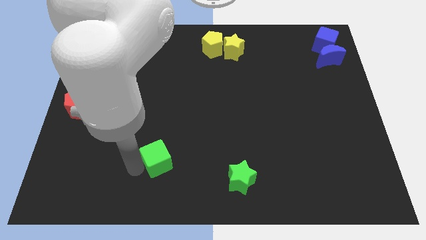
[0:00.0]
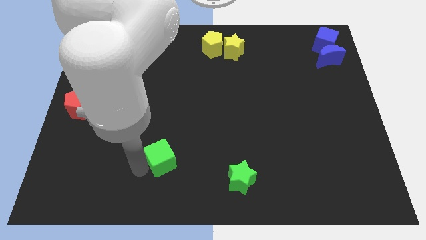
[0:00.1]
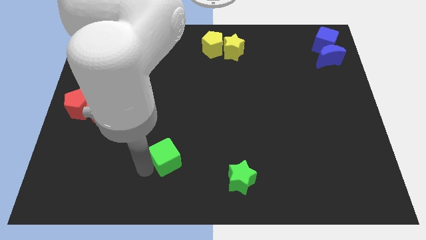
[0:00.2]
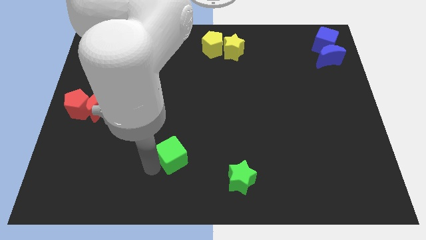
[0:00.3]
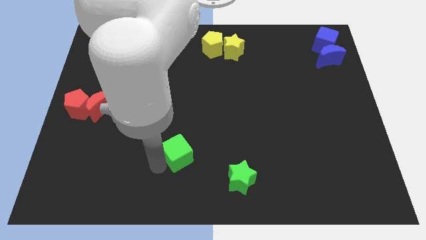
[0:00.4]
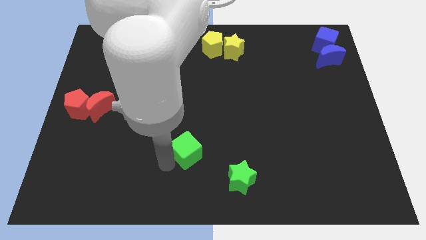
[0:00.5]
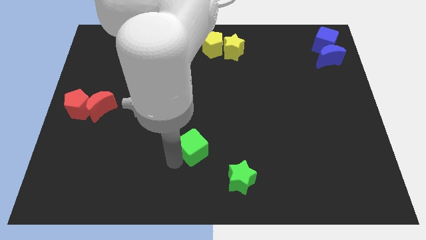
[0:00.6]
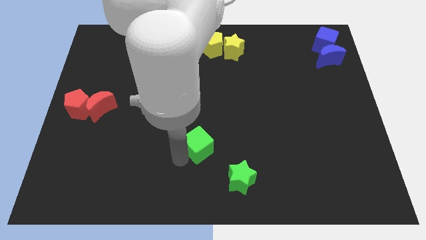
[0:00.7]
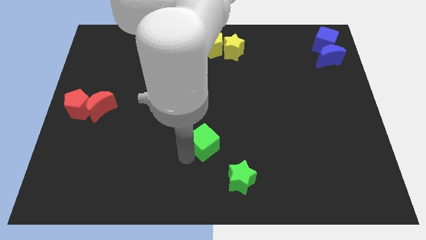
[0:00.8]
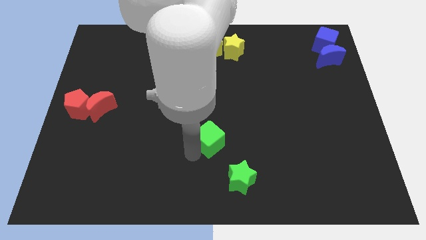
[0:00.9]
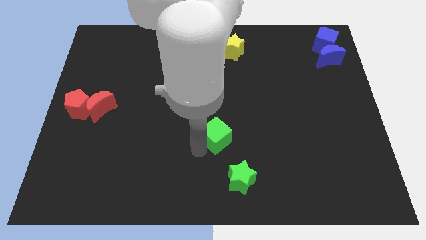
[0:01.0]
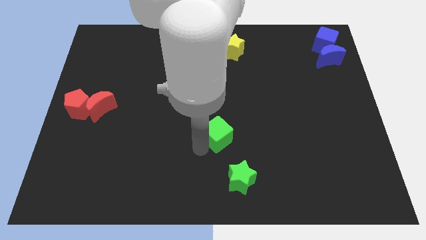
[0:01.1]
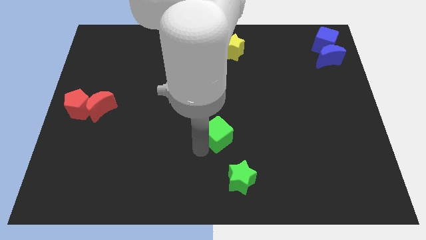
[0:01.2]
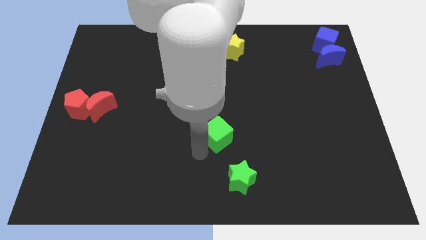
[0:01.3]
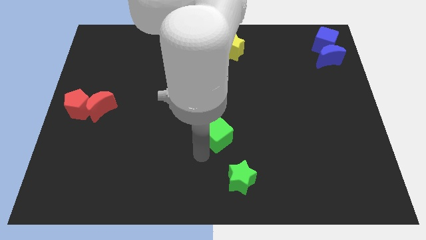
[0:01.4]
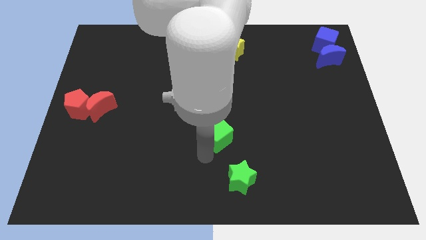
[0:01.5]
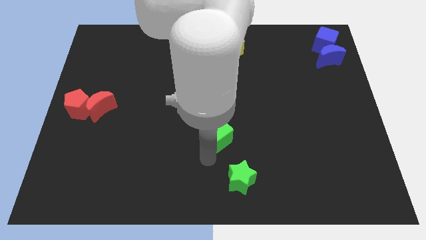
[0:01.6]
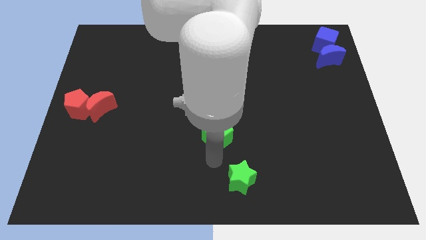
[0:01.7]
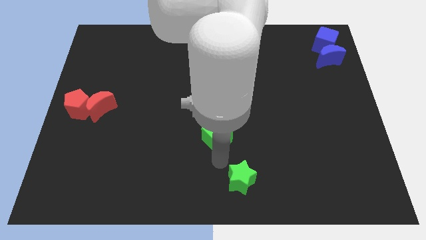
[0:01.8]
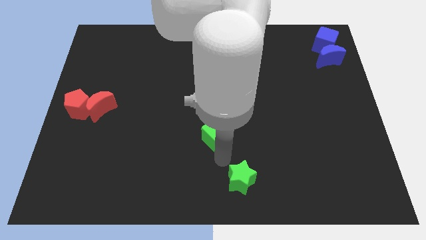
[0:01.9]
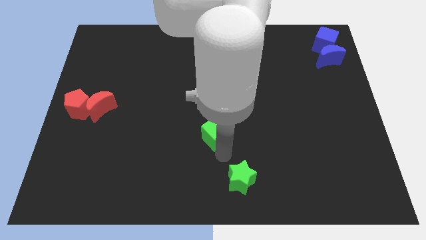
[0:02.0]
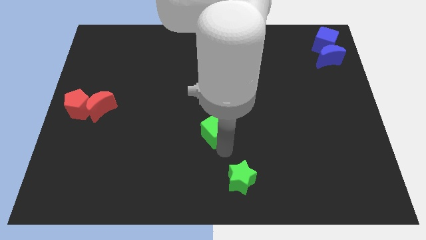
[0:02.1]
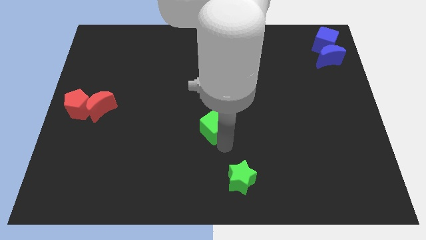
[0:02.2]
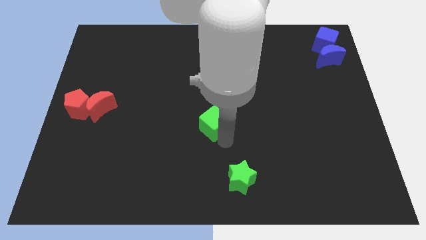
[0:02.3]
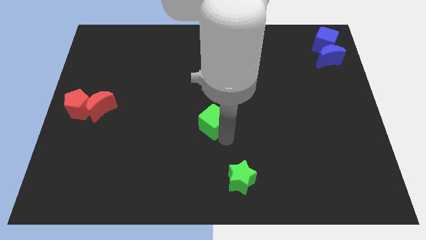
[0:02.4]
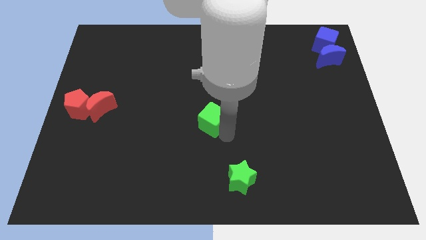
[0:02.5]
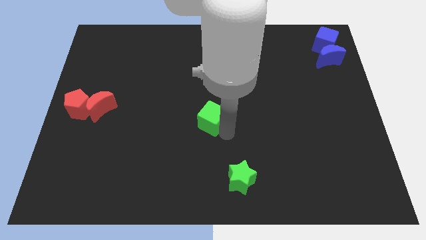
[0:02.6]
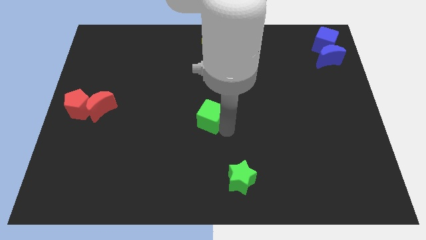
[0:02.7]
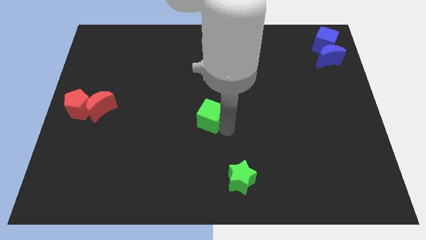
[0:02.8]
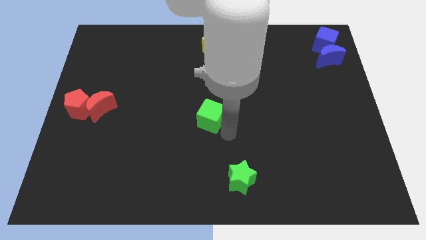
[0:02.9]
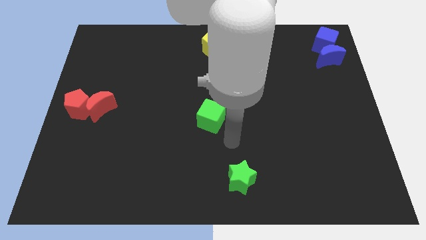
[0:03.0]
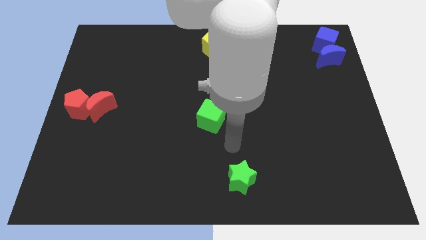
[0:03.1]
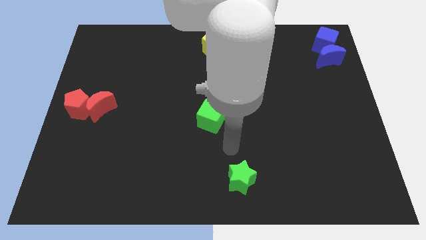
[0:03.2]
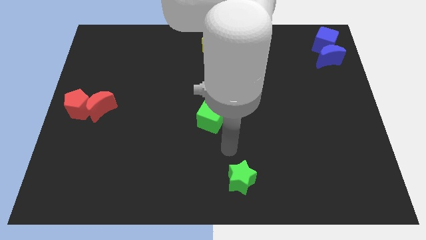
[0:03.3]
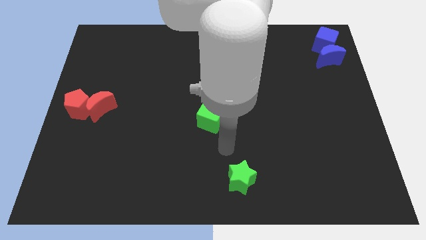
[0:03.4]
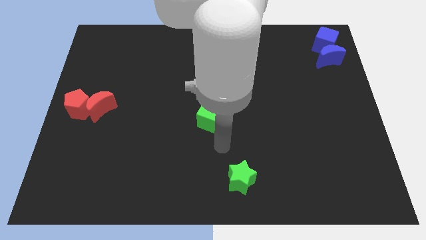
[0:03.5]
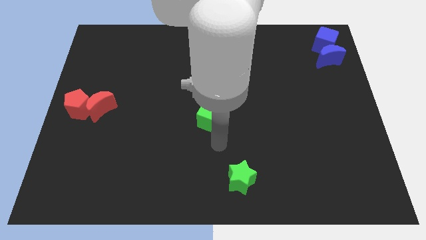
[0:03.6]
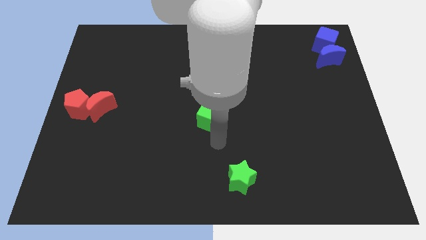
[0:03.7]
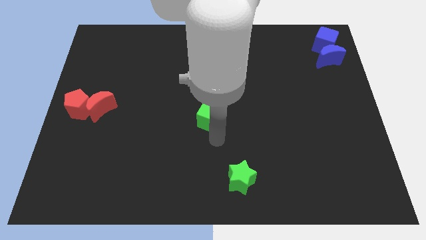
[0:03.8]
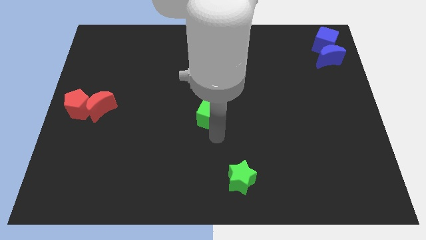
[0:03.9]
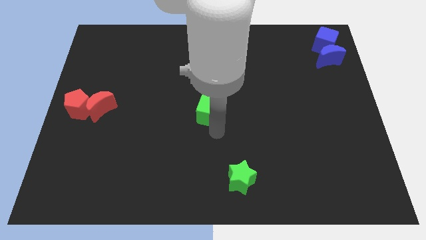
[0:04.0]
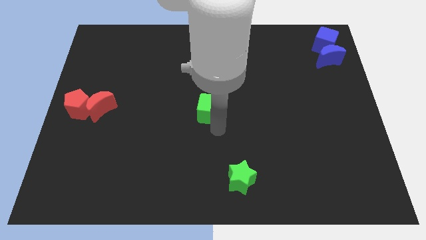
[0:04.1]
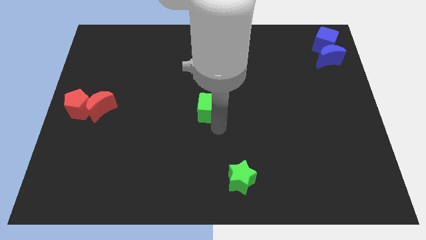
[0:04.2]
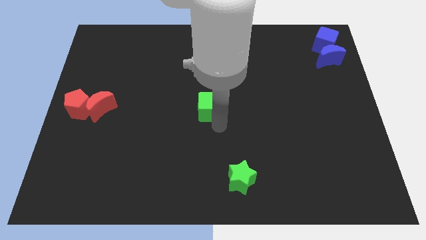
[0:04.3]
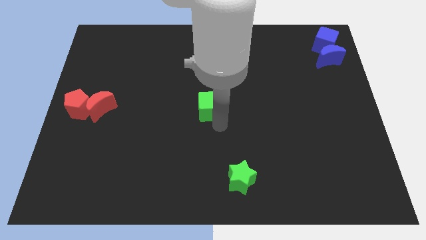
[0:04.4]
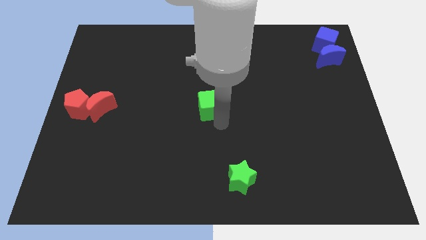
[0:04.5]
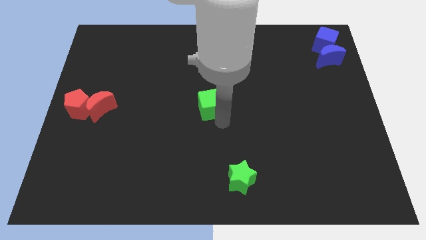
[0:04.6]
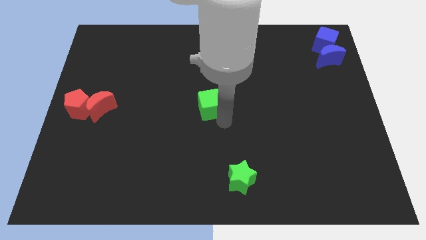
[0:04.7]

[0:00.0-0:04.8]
place green cube in the center

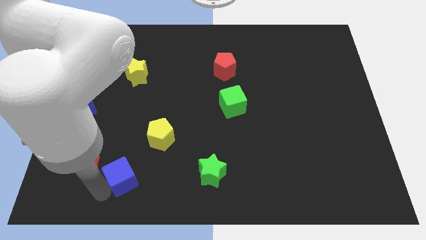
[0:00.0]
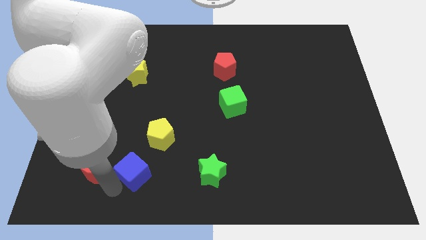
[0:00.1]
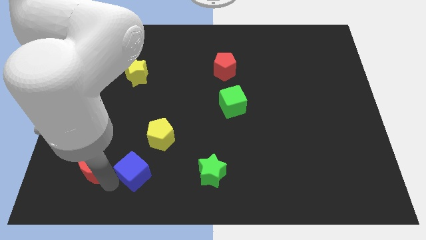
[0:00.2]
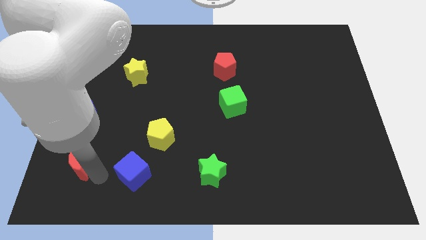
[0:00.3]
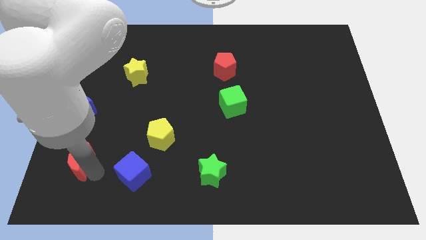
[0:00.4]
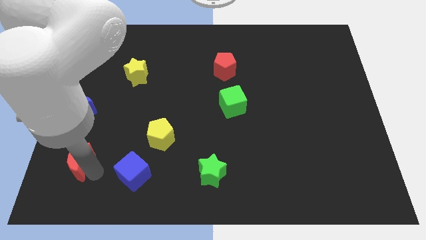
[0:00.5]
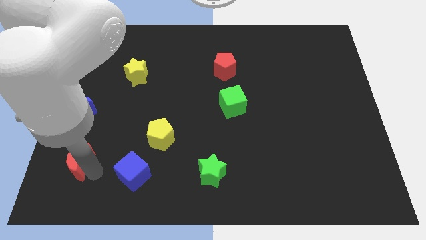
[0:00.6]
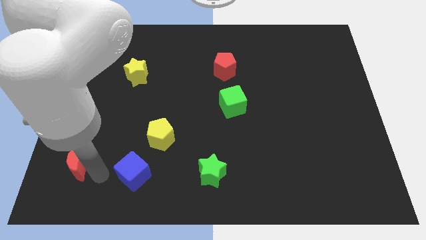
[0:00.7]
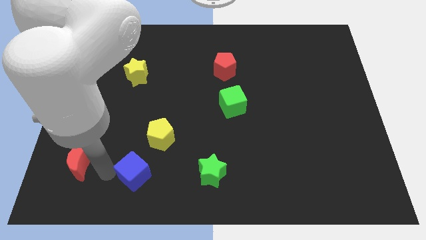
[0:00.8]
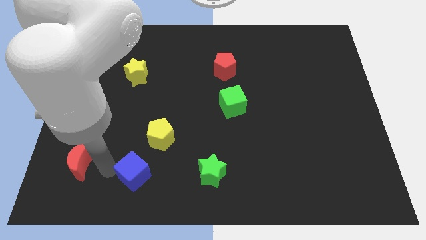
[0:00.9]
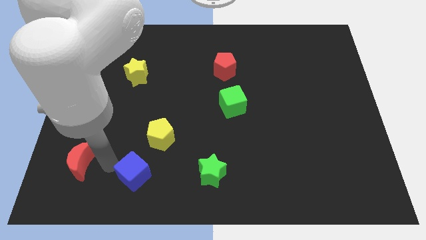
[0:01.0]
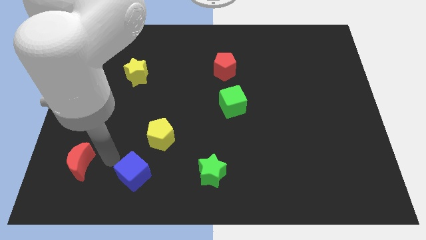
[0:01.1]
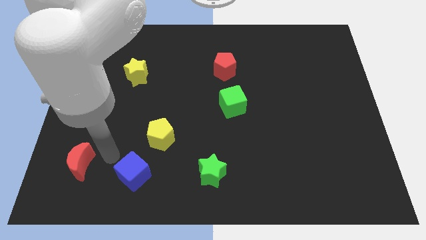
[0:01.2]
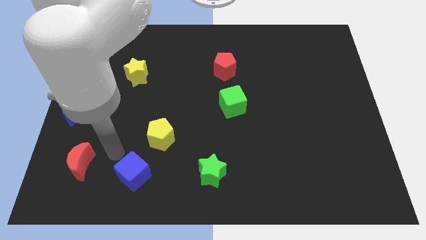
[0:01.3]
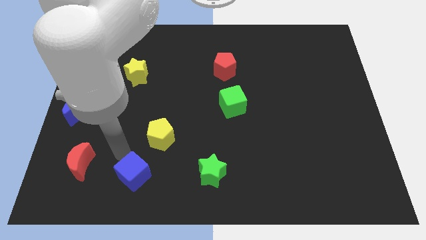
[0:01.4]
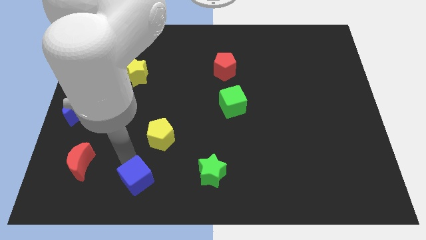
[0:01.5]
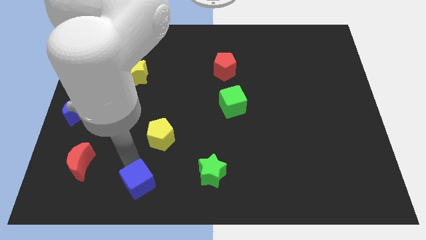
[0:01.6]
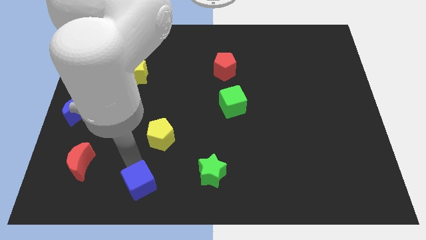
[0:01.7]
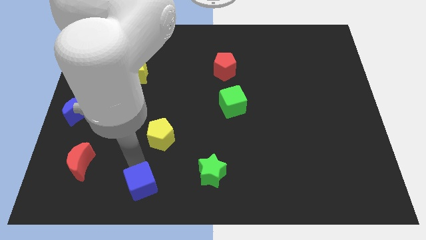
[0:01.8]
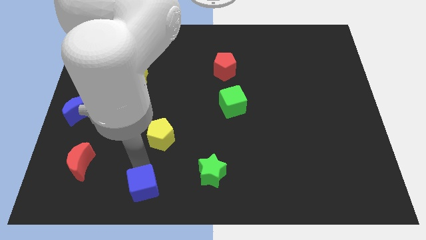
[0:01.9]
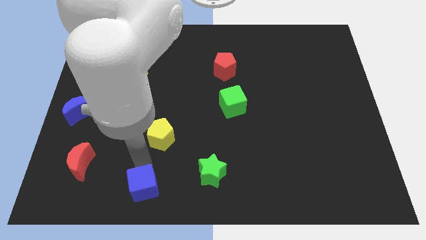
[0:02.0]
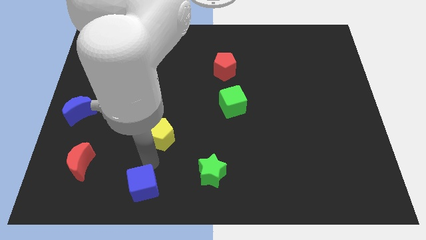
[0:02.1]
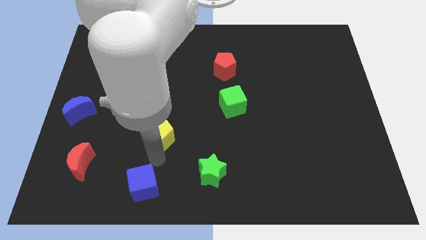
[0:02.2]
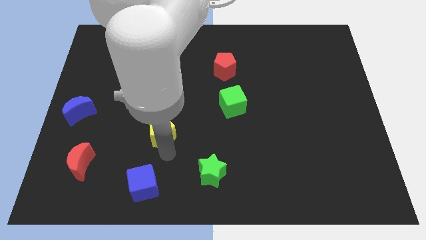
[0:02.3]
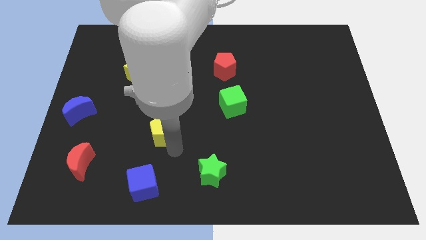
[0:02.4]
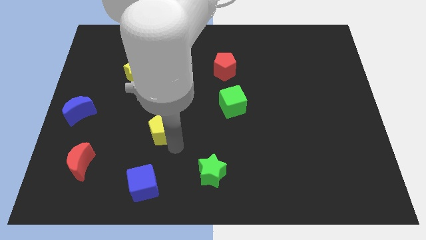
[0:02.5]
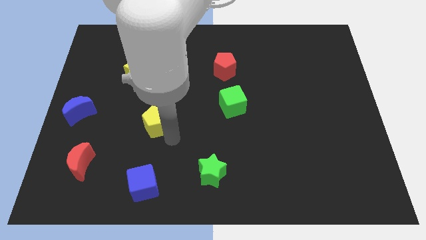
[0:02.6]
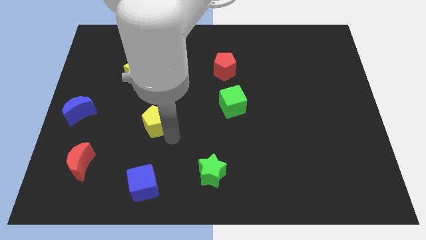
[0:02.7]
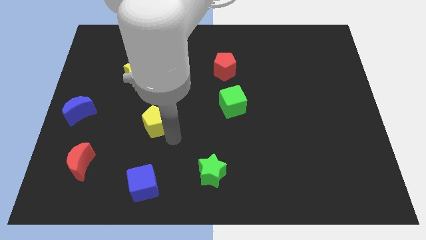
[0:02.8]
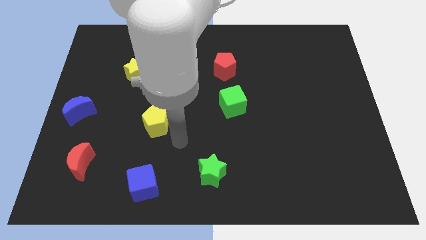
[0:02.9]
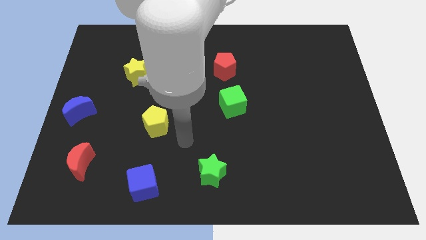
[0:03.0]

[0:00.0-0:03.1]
slightly move the red crescent blue cube and the yellow pentagon

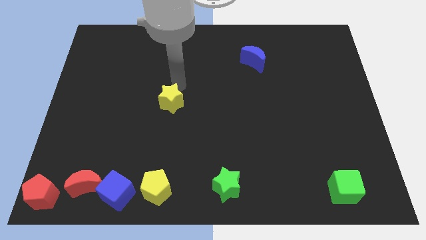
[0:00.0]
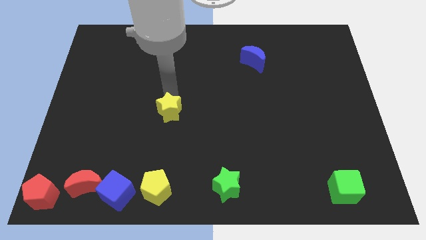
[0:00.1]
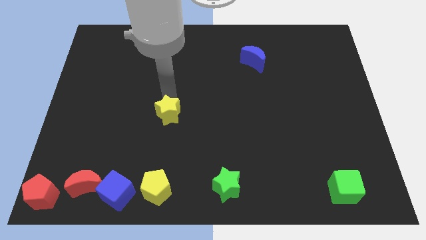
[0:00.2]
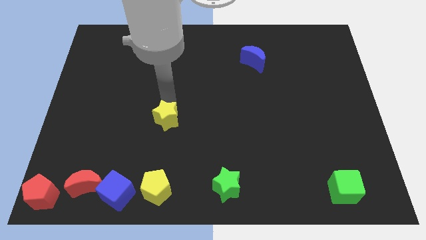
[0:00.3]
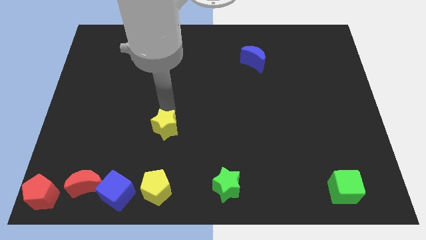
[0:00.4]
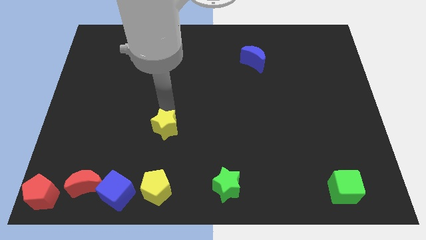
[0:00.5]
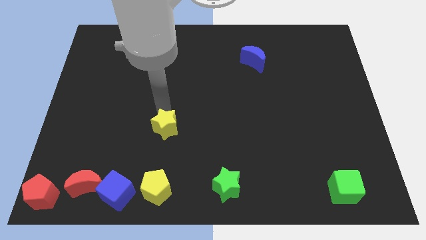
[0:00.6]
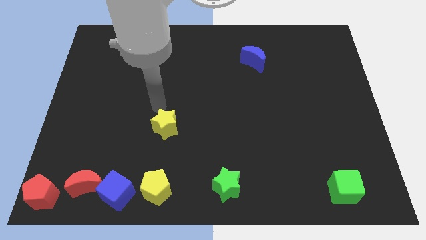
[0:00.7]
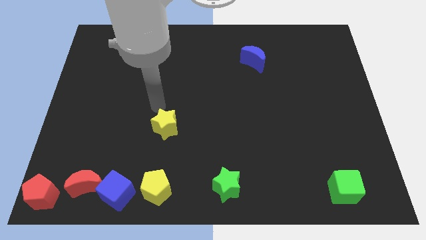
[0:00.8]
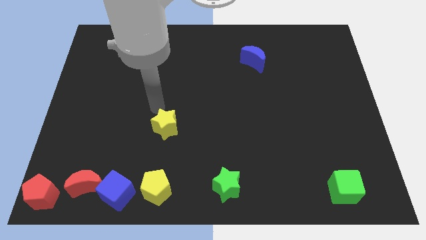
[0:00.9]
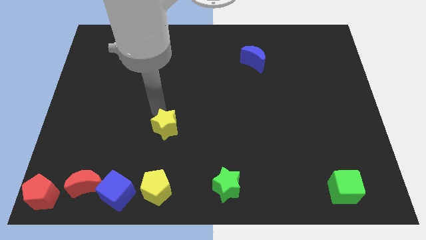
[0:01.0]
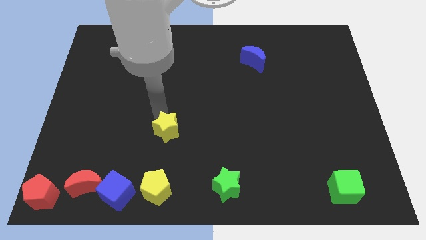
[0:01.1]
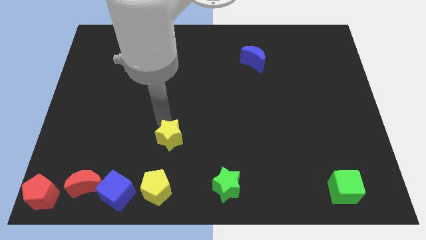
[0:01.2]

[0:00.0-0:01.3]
place yellow star above yellow pentagon
